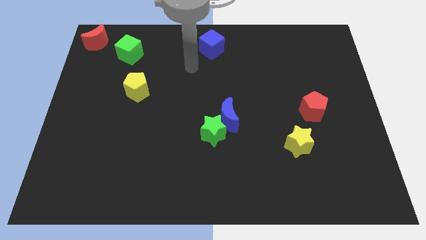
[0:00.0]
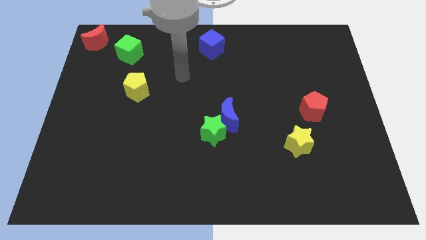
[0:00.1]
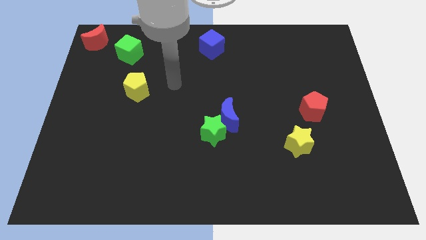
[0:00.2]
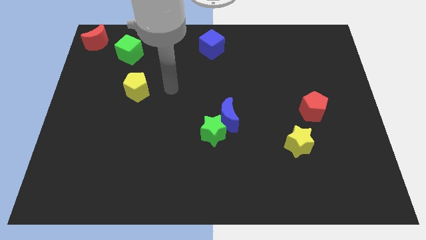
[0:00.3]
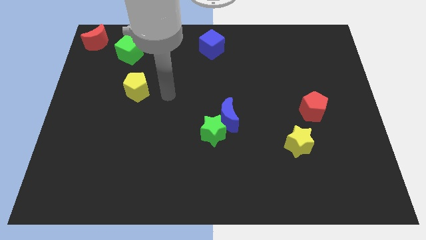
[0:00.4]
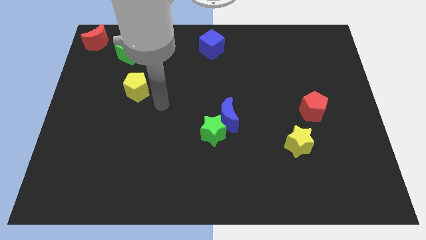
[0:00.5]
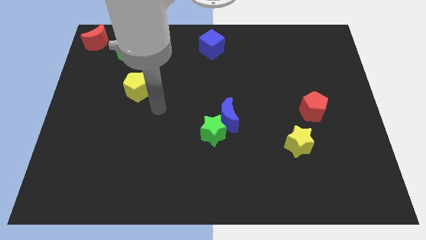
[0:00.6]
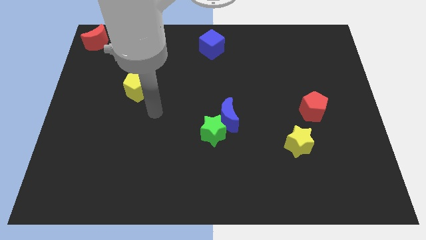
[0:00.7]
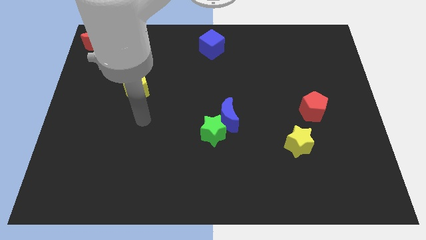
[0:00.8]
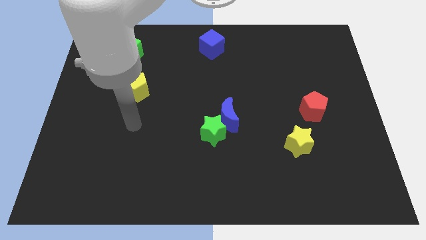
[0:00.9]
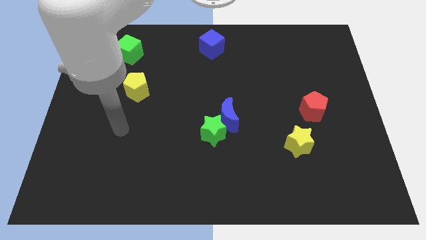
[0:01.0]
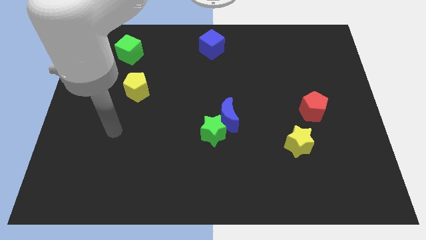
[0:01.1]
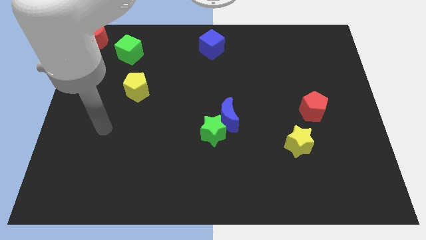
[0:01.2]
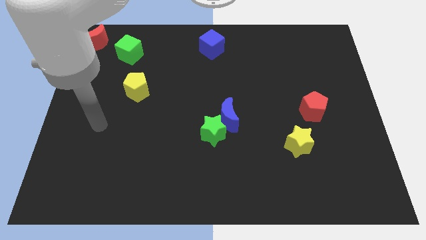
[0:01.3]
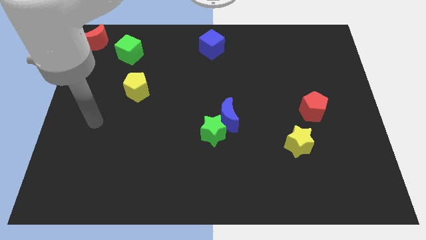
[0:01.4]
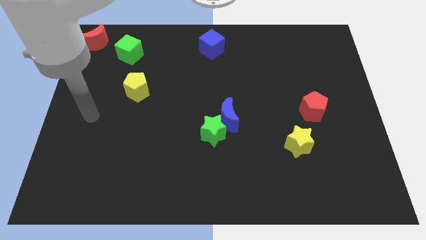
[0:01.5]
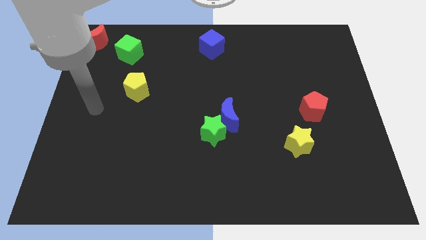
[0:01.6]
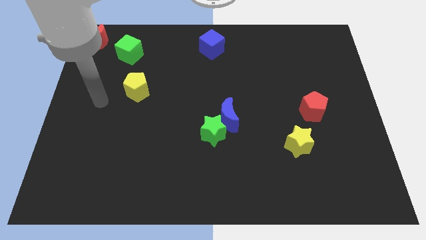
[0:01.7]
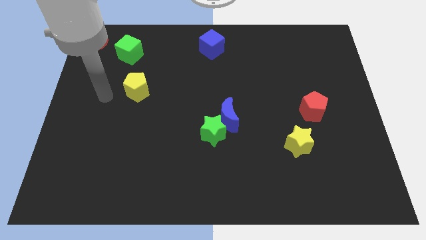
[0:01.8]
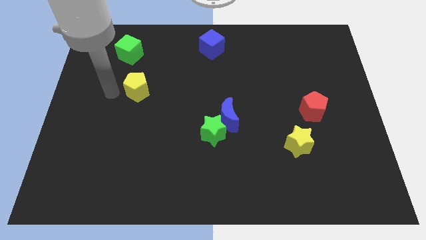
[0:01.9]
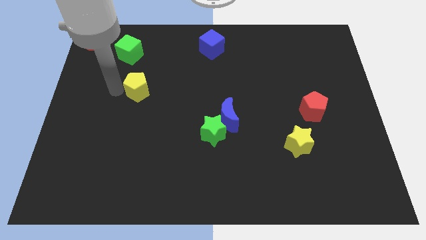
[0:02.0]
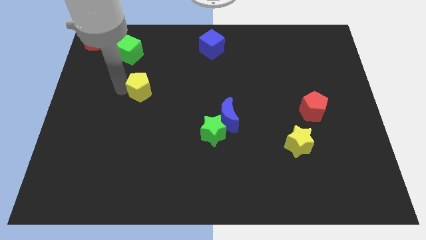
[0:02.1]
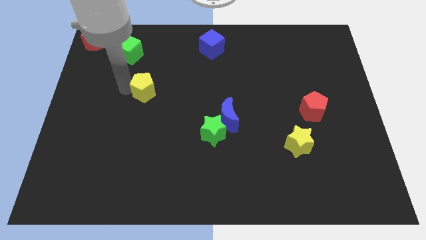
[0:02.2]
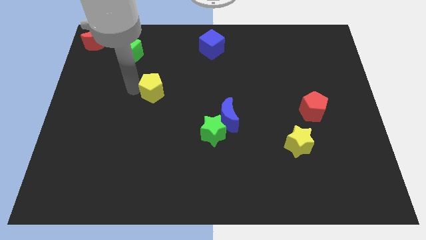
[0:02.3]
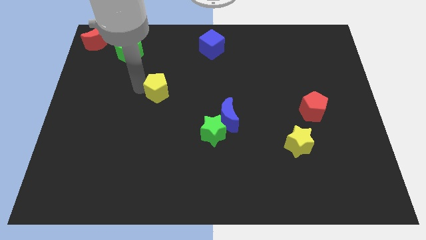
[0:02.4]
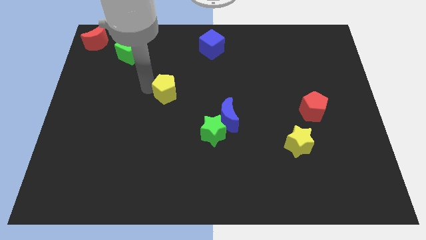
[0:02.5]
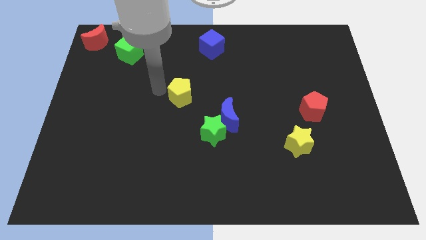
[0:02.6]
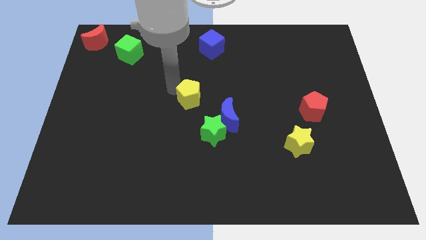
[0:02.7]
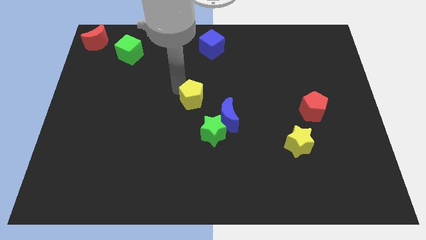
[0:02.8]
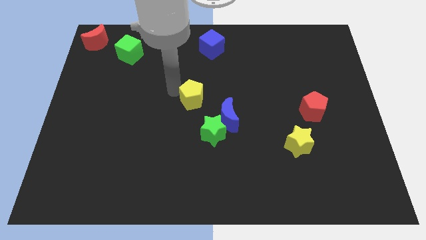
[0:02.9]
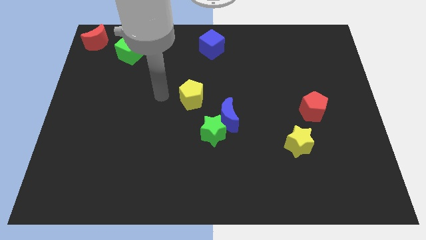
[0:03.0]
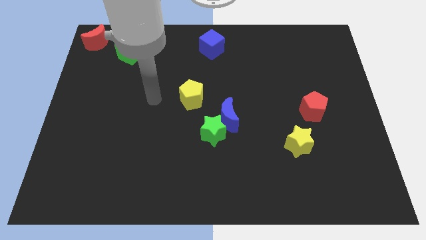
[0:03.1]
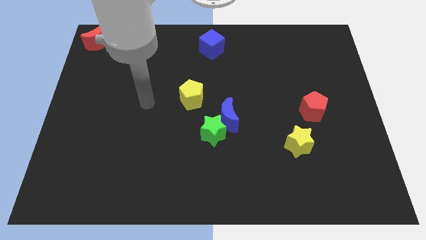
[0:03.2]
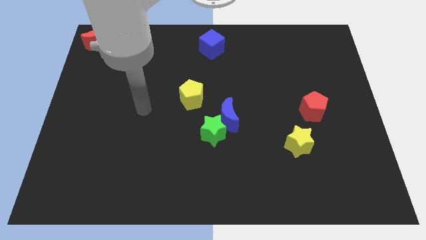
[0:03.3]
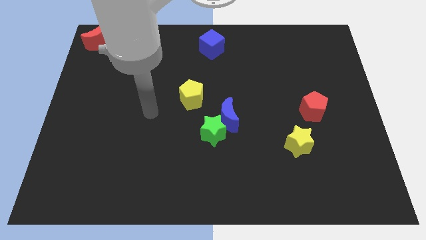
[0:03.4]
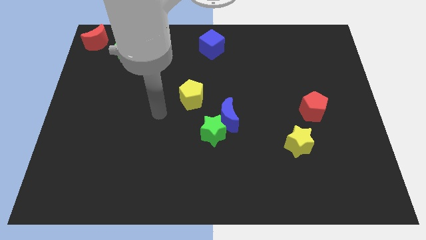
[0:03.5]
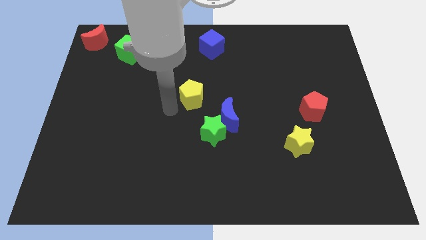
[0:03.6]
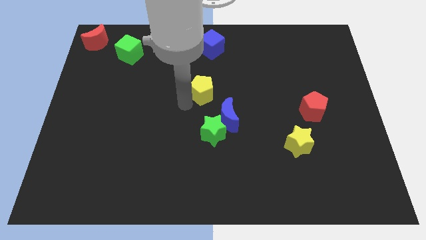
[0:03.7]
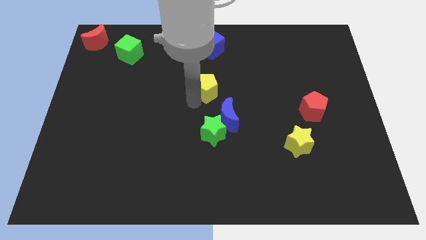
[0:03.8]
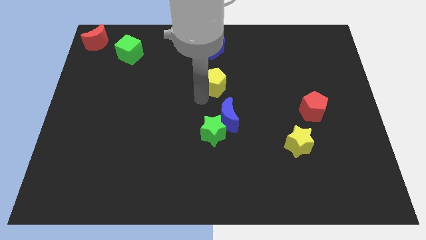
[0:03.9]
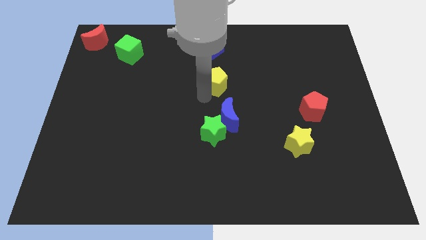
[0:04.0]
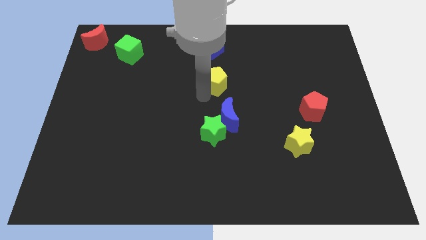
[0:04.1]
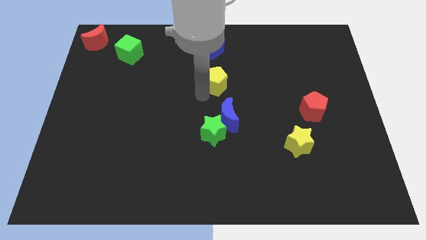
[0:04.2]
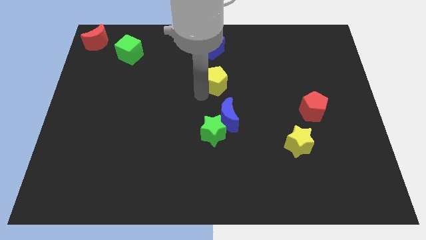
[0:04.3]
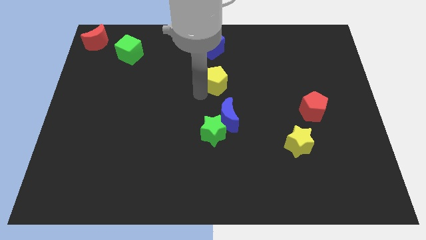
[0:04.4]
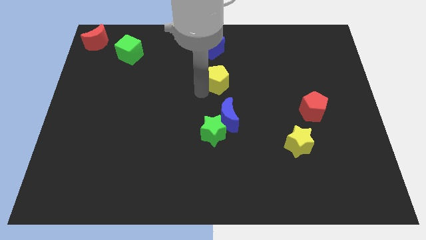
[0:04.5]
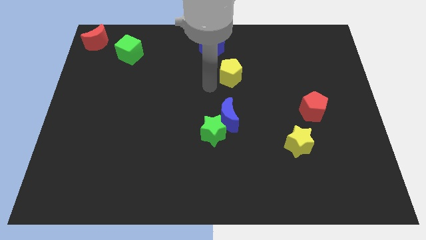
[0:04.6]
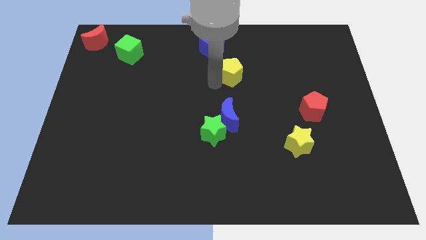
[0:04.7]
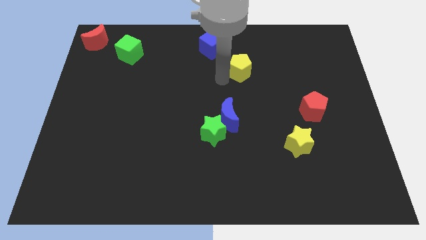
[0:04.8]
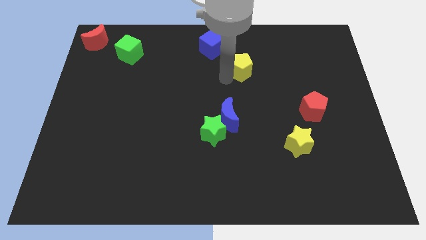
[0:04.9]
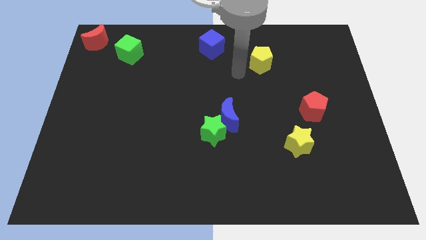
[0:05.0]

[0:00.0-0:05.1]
drag the yellow pentagon diagonally to the bottom right of the blue cube

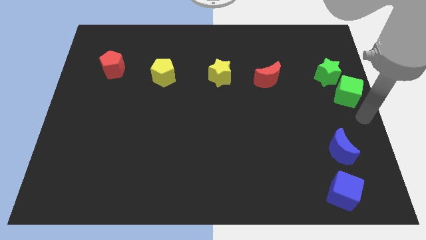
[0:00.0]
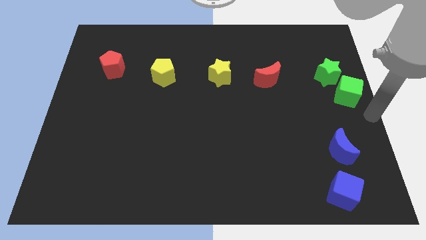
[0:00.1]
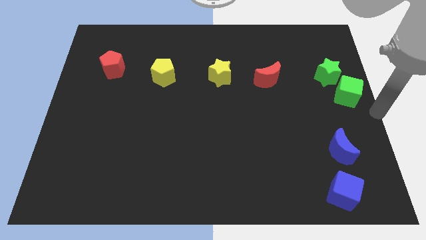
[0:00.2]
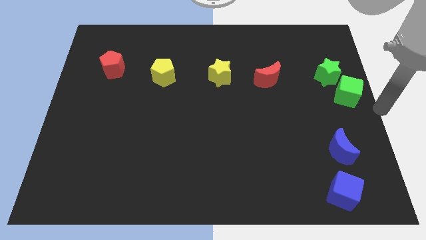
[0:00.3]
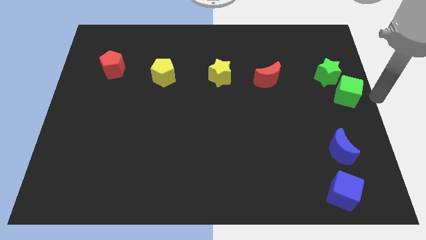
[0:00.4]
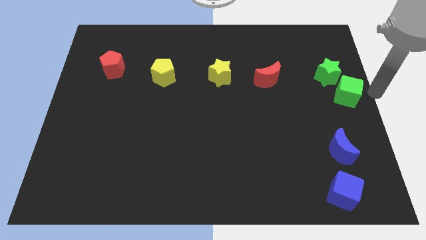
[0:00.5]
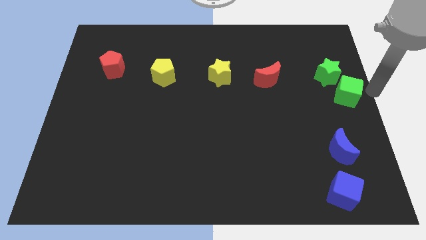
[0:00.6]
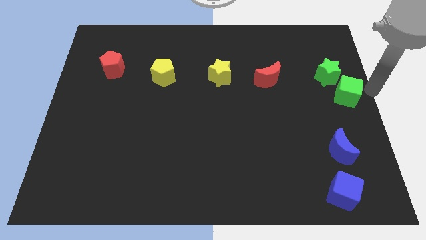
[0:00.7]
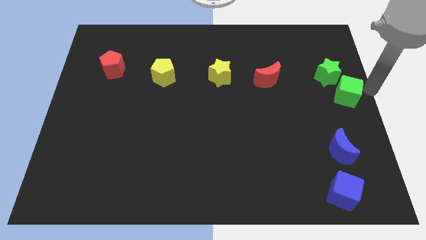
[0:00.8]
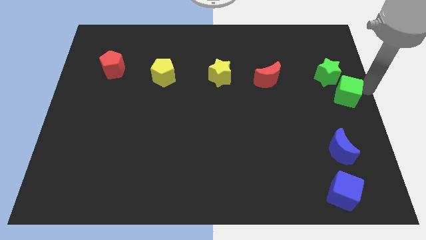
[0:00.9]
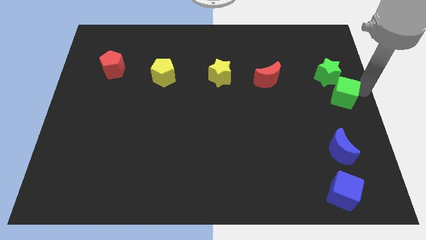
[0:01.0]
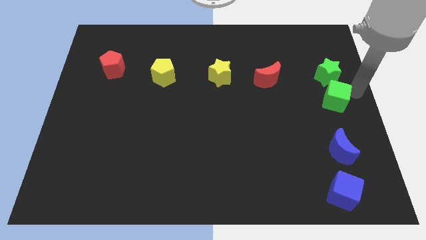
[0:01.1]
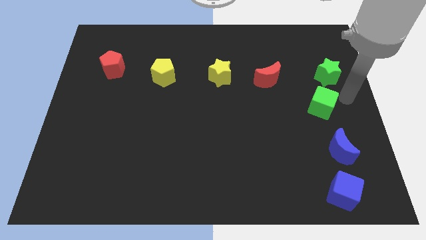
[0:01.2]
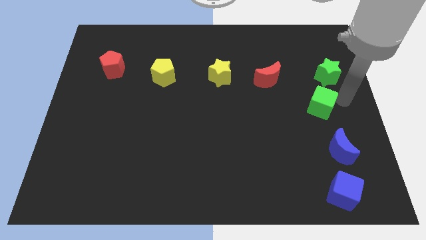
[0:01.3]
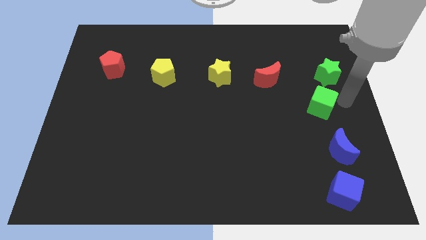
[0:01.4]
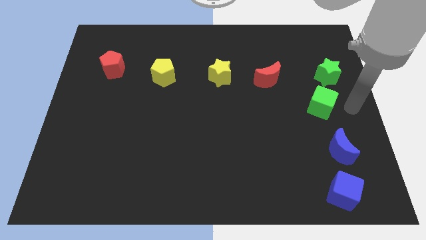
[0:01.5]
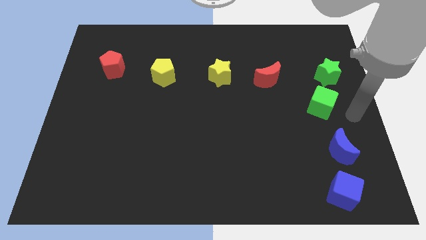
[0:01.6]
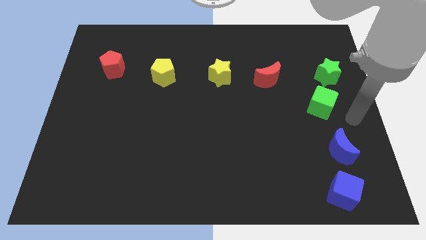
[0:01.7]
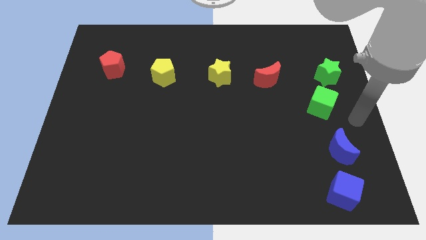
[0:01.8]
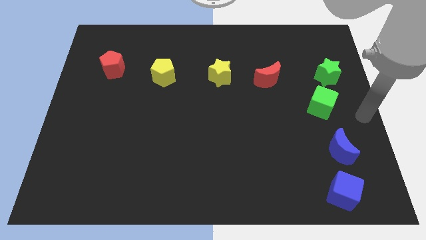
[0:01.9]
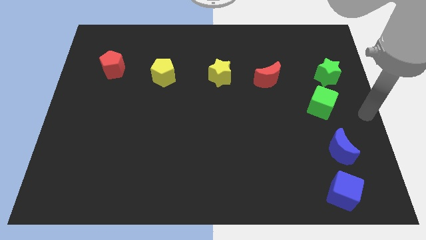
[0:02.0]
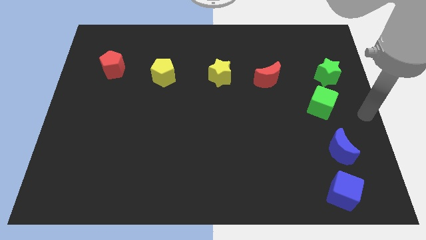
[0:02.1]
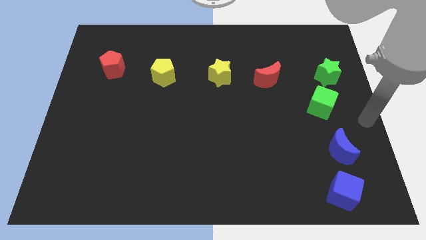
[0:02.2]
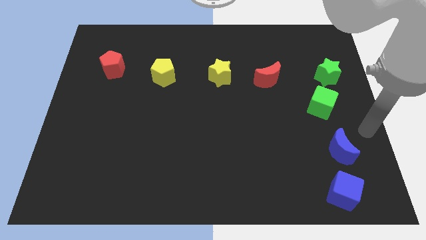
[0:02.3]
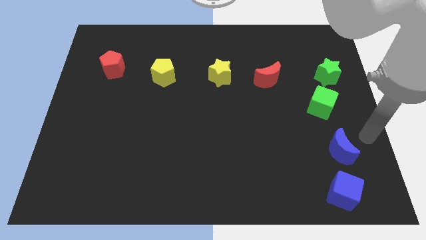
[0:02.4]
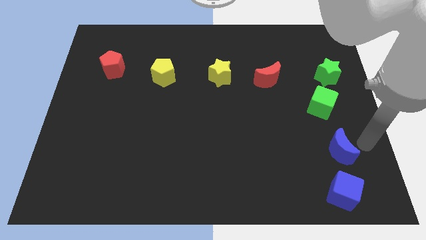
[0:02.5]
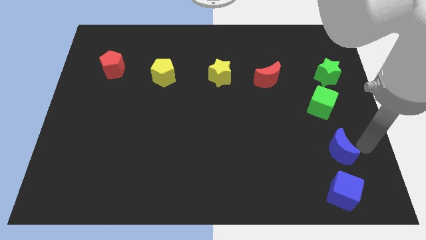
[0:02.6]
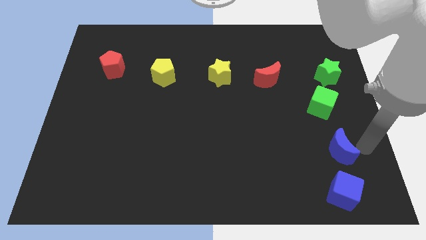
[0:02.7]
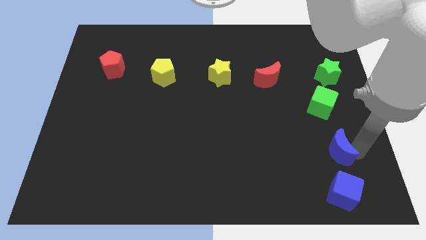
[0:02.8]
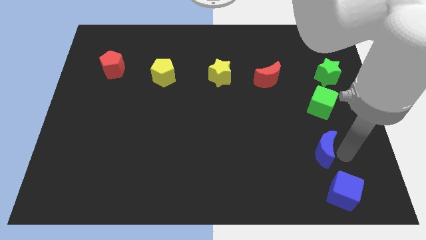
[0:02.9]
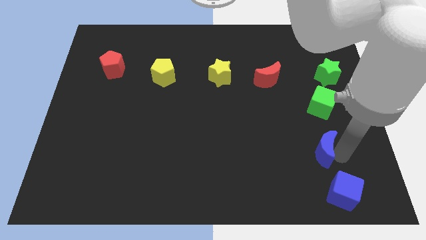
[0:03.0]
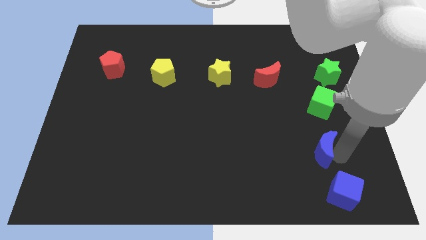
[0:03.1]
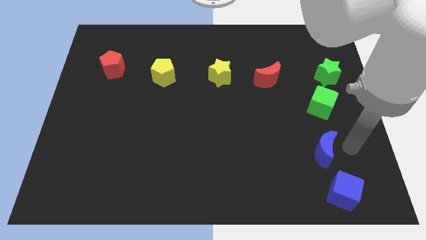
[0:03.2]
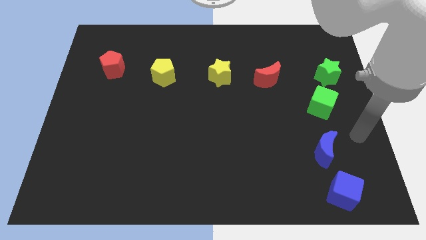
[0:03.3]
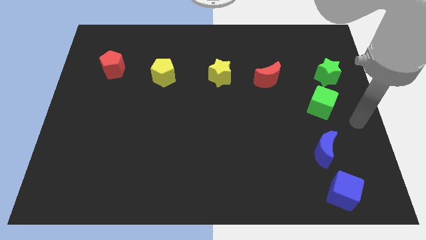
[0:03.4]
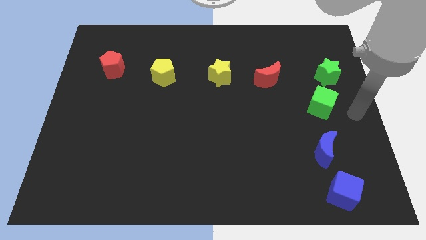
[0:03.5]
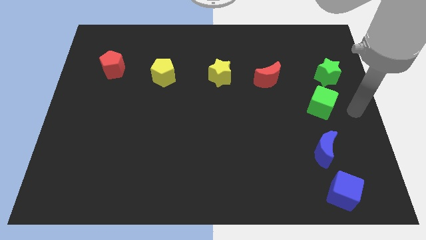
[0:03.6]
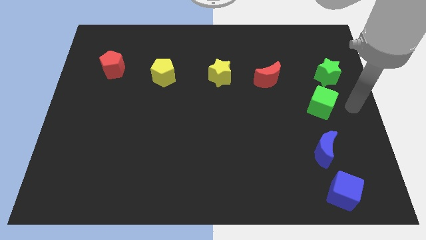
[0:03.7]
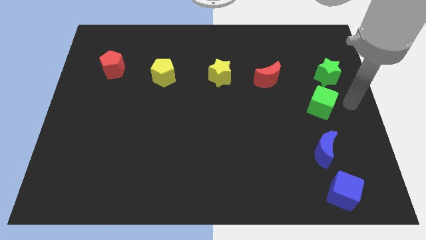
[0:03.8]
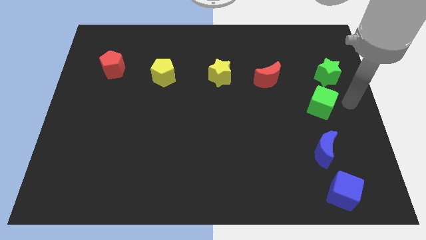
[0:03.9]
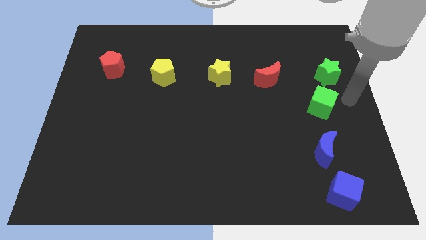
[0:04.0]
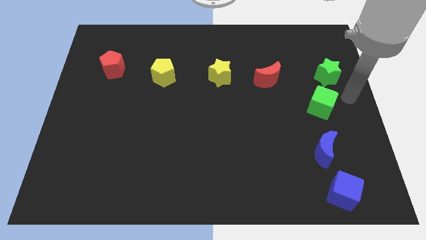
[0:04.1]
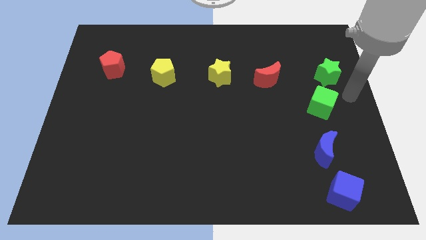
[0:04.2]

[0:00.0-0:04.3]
move the green cube and blue crescent vertically below the green star
